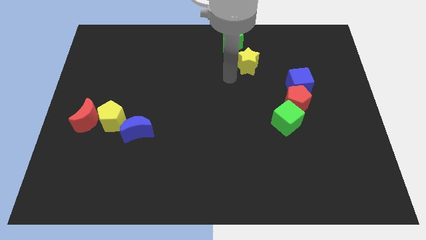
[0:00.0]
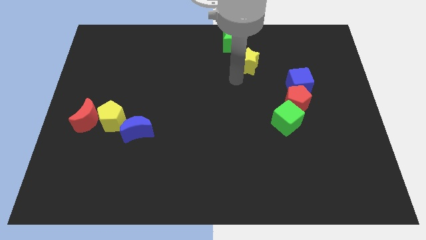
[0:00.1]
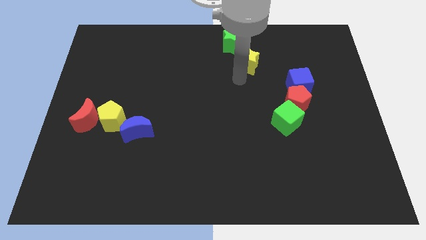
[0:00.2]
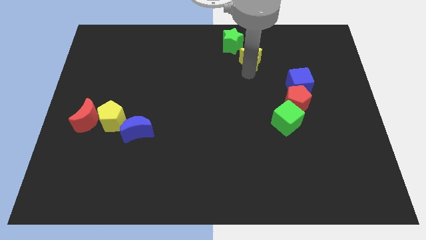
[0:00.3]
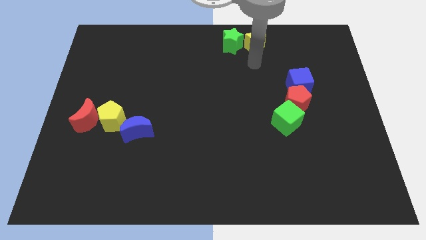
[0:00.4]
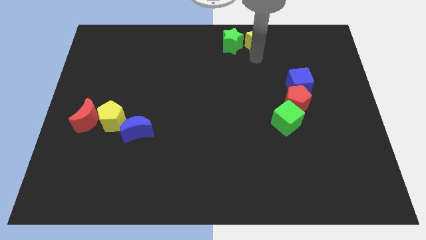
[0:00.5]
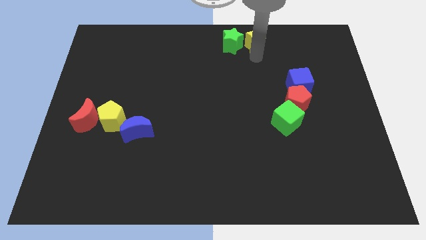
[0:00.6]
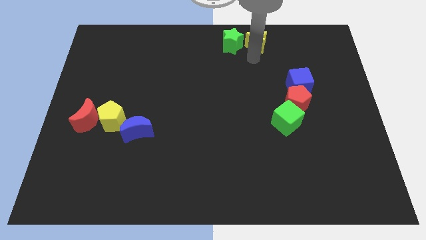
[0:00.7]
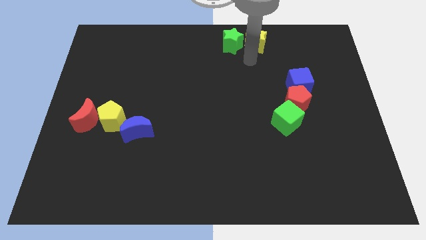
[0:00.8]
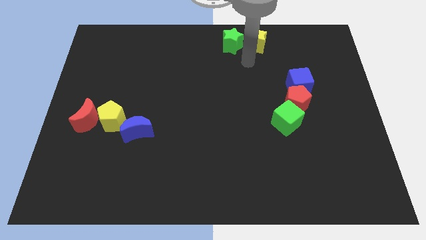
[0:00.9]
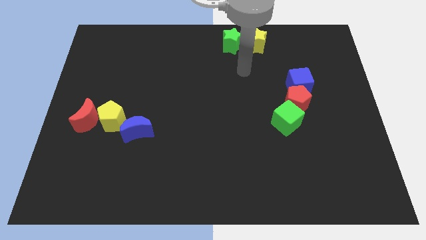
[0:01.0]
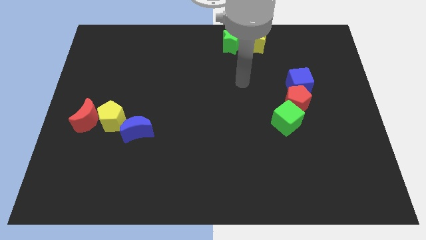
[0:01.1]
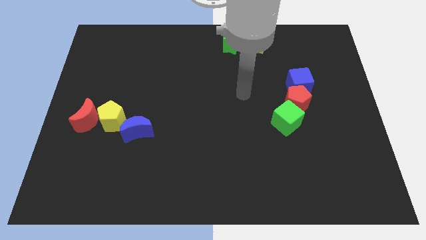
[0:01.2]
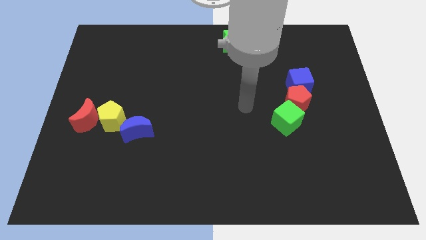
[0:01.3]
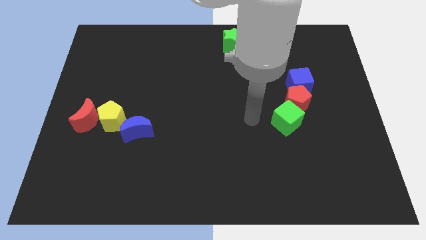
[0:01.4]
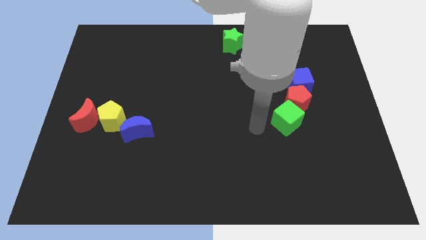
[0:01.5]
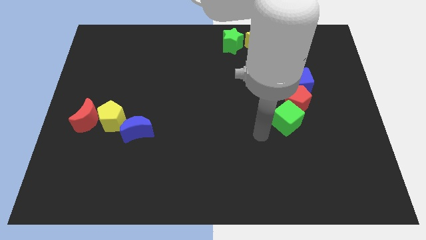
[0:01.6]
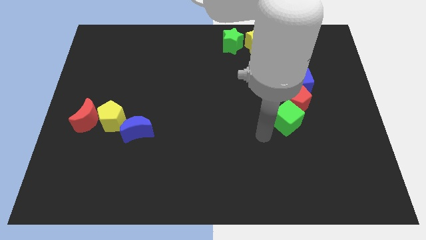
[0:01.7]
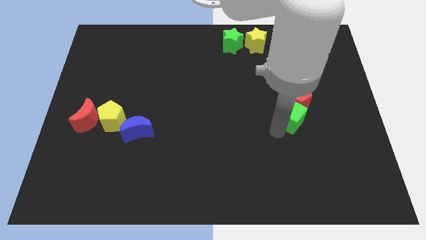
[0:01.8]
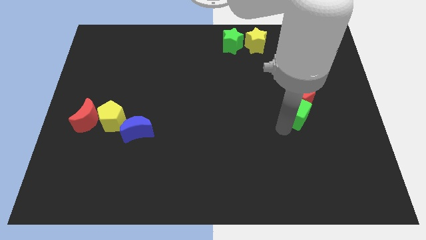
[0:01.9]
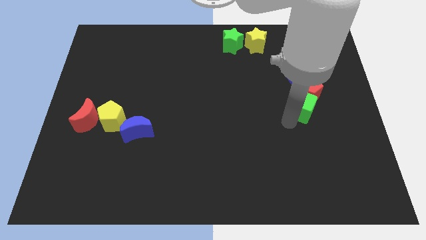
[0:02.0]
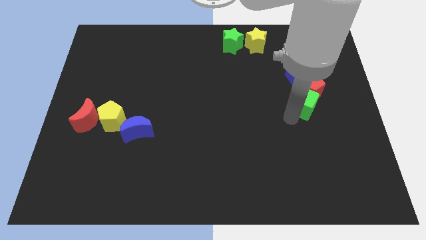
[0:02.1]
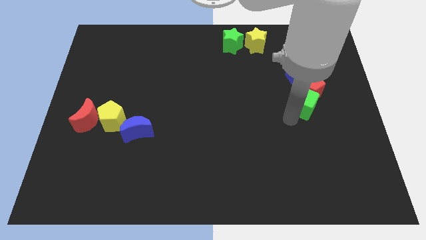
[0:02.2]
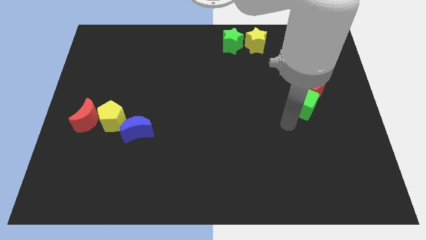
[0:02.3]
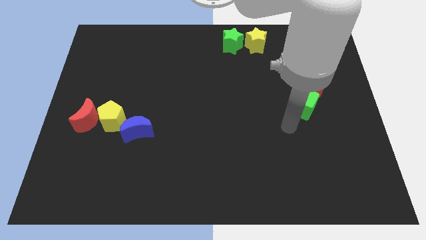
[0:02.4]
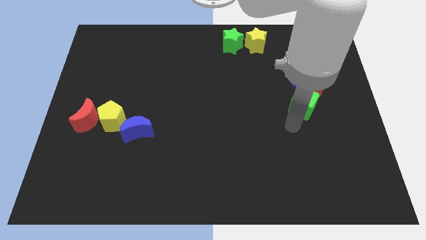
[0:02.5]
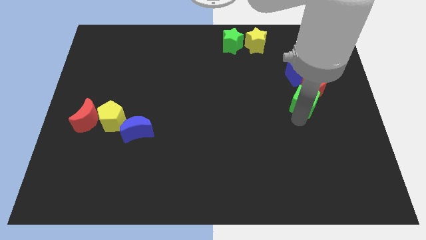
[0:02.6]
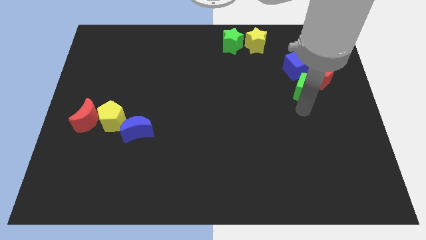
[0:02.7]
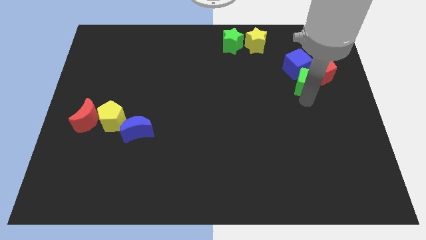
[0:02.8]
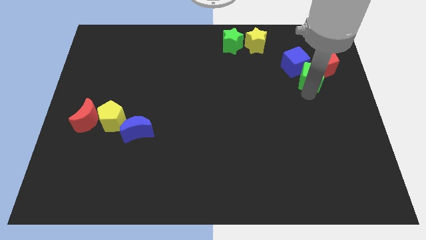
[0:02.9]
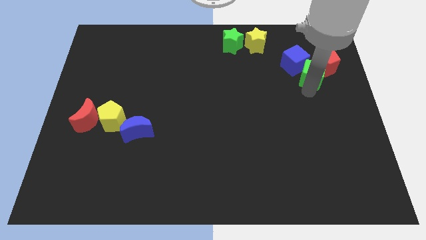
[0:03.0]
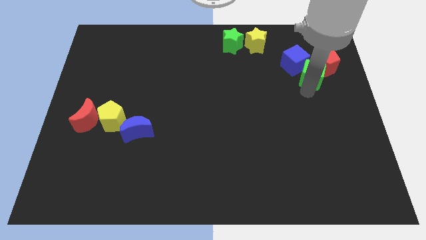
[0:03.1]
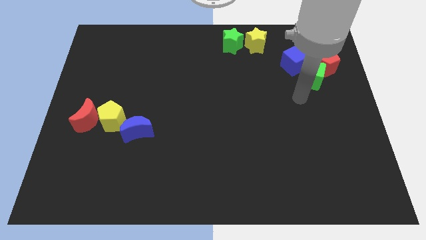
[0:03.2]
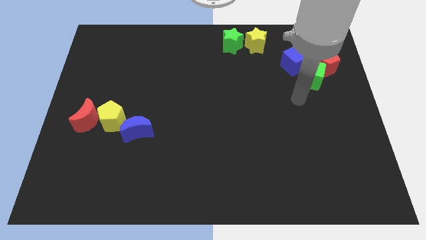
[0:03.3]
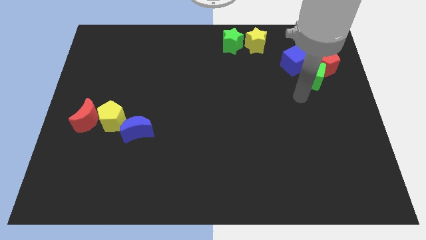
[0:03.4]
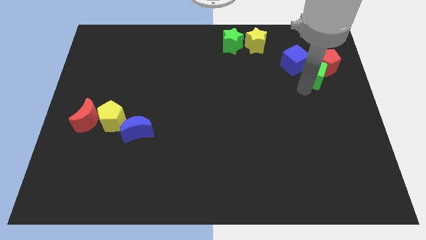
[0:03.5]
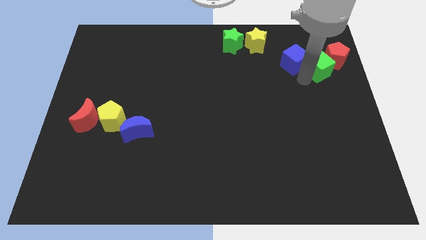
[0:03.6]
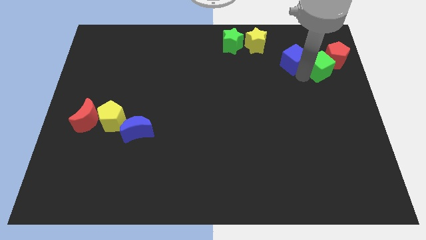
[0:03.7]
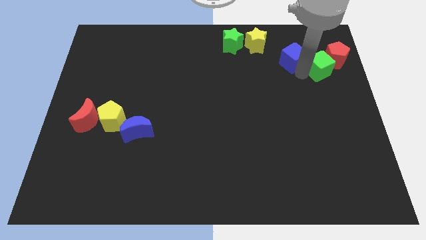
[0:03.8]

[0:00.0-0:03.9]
place the blue cube to the bottom right of the yellow star

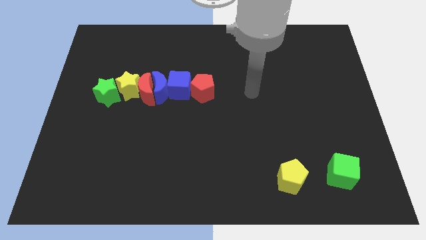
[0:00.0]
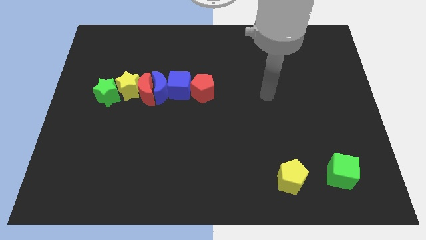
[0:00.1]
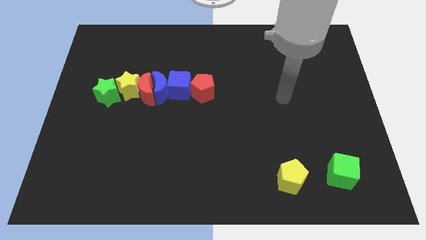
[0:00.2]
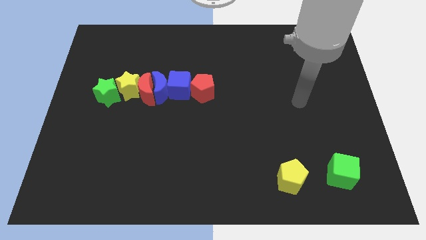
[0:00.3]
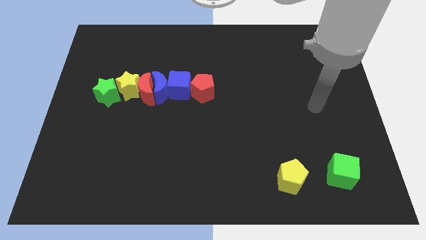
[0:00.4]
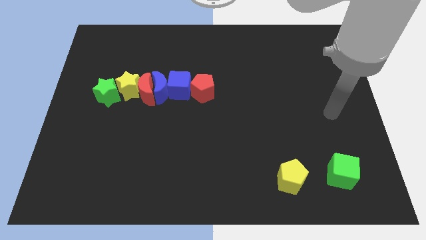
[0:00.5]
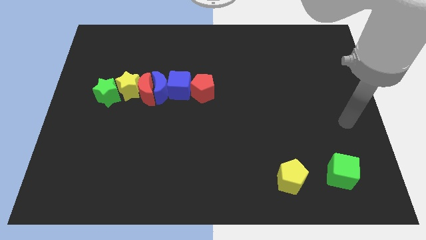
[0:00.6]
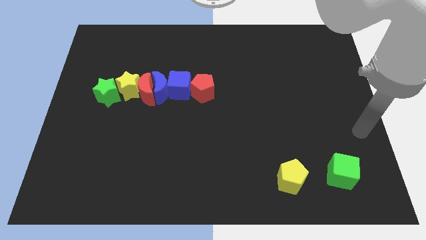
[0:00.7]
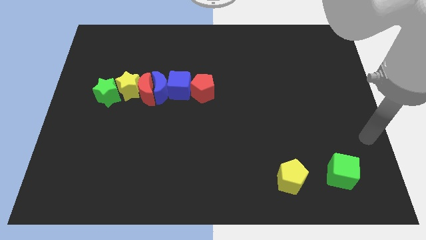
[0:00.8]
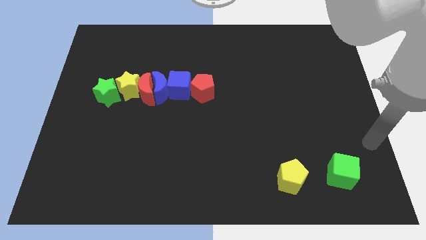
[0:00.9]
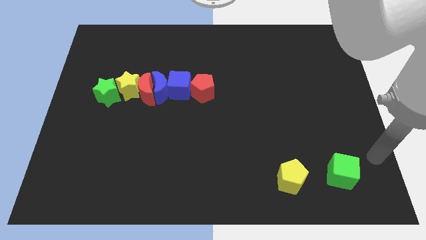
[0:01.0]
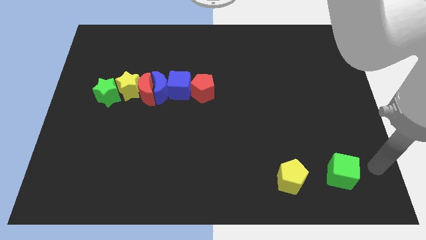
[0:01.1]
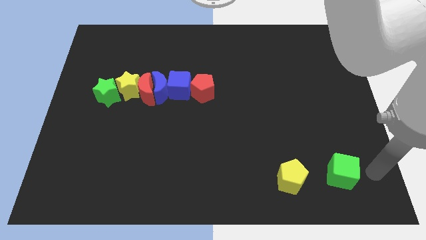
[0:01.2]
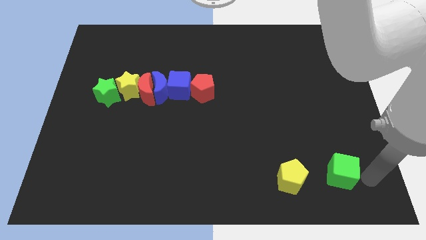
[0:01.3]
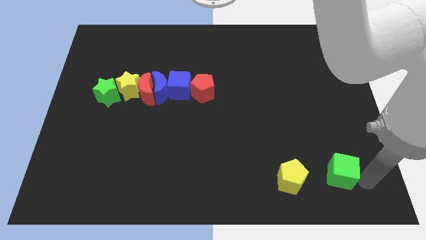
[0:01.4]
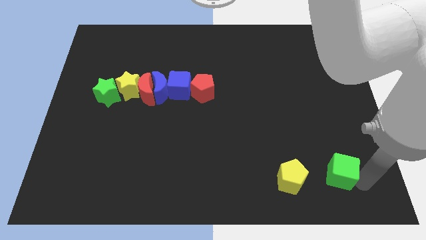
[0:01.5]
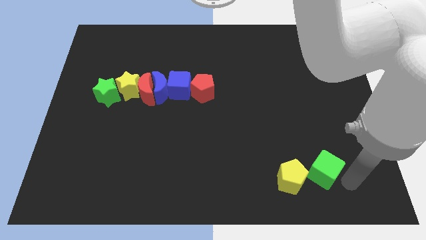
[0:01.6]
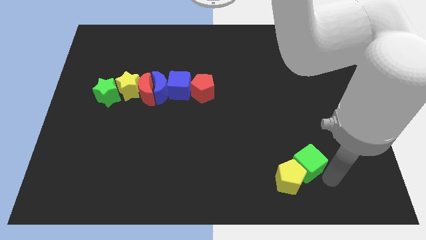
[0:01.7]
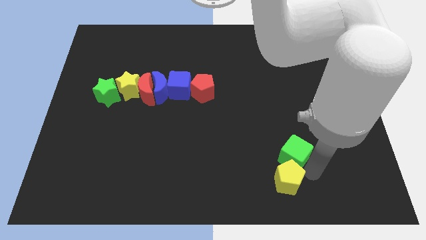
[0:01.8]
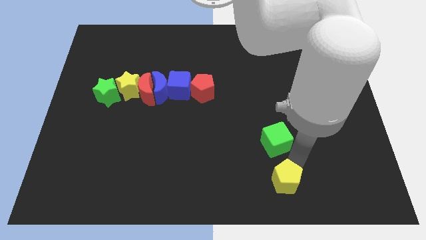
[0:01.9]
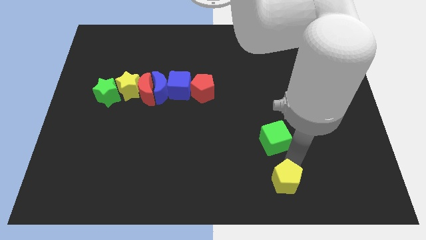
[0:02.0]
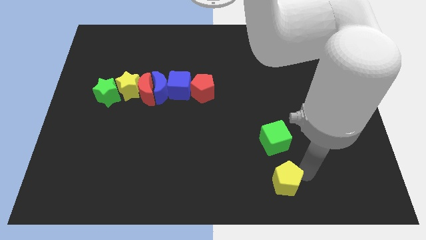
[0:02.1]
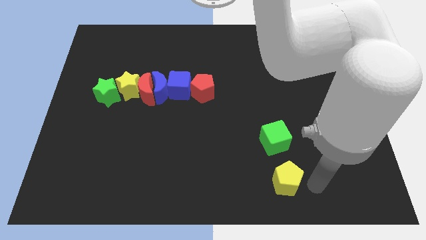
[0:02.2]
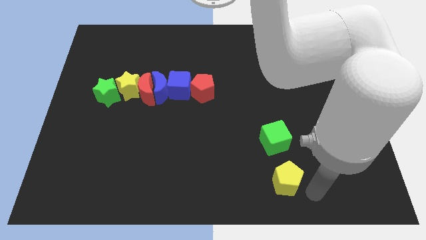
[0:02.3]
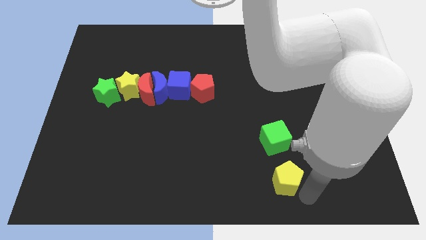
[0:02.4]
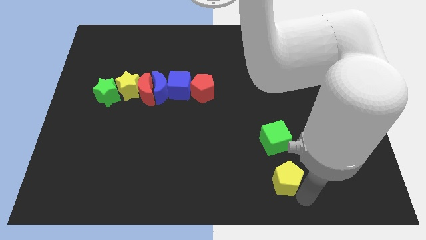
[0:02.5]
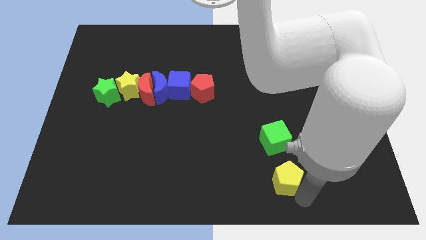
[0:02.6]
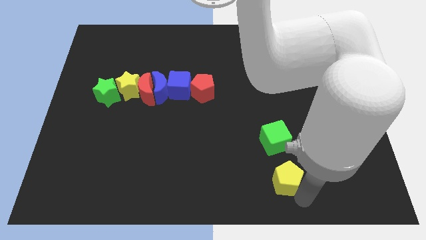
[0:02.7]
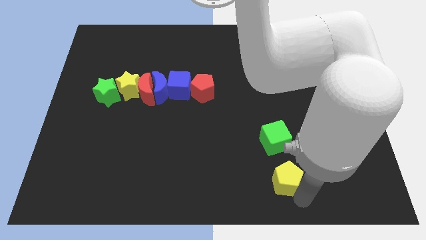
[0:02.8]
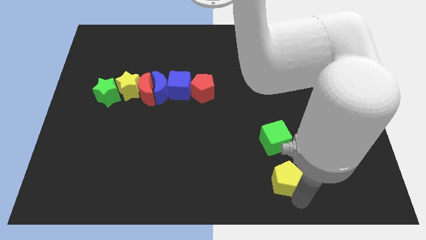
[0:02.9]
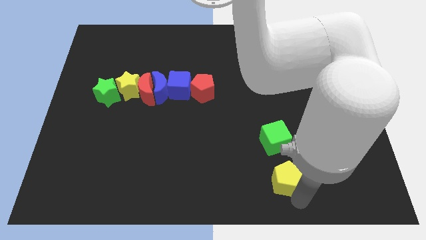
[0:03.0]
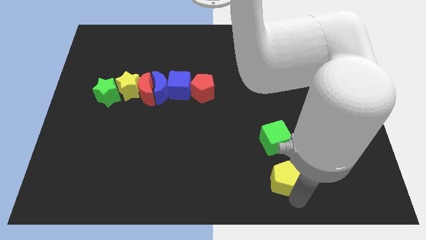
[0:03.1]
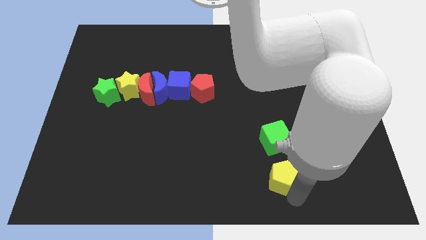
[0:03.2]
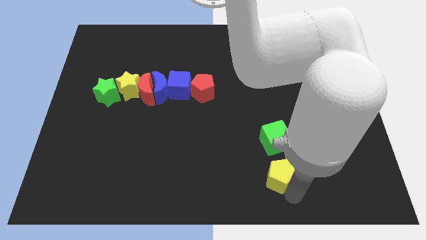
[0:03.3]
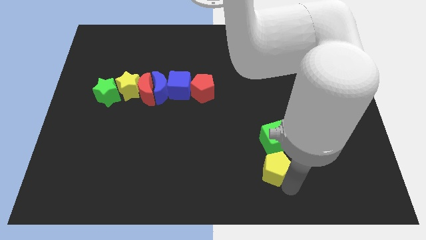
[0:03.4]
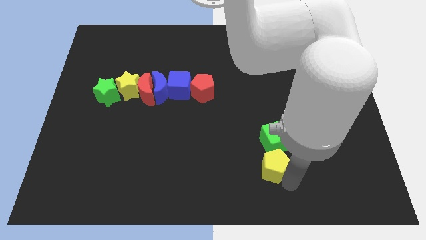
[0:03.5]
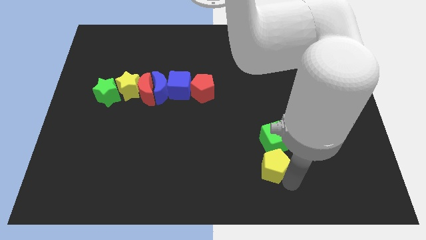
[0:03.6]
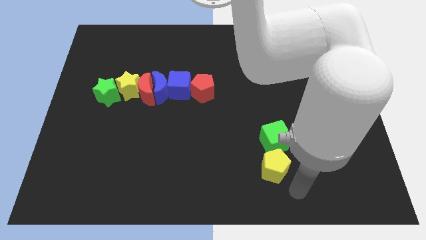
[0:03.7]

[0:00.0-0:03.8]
push yellow pentagon into green cube

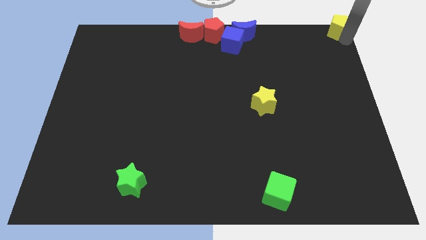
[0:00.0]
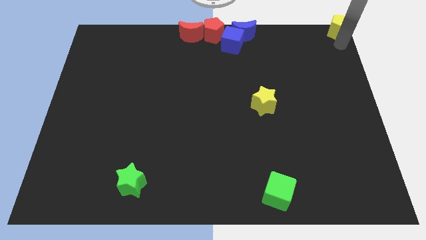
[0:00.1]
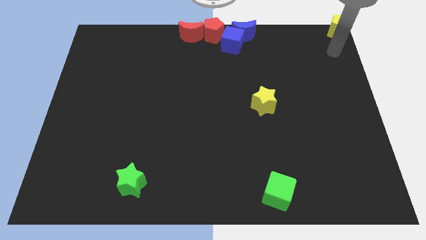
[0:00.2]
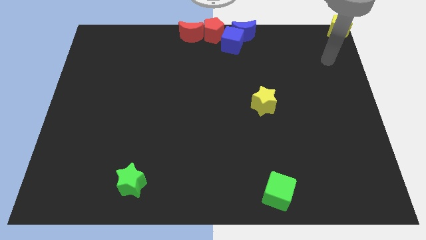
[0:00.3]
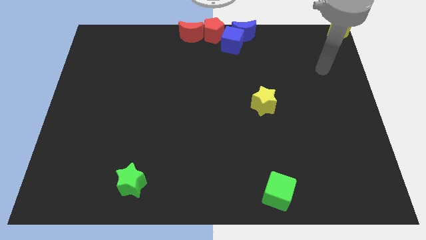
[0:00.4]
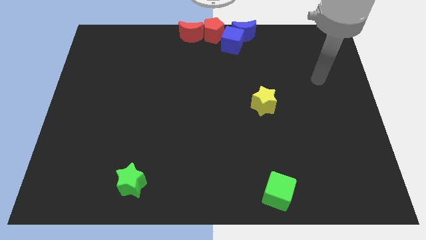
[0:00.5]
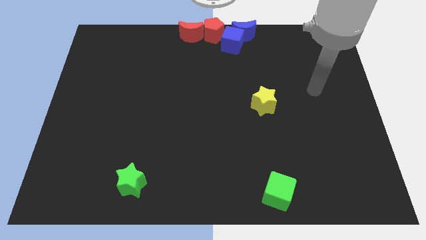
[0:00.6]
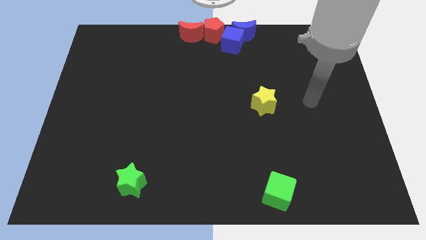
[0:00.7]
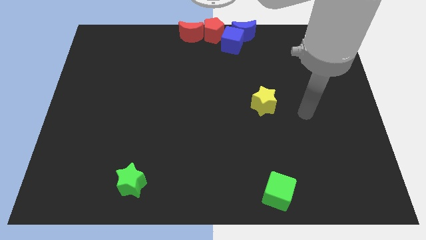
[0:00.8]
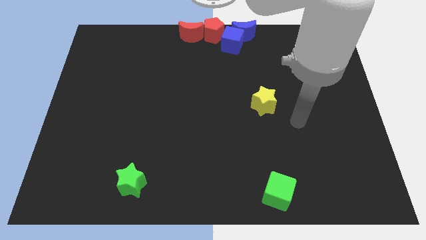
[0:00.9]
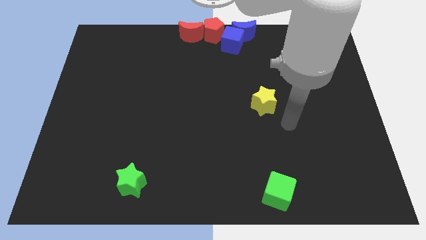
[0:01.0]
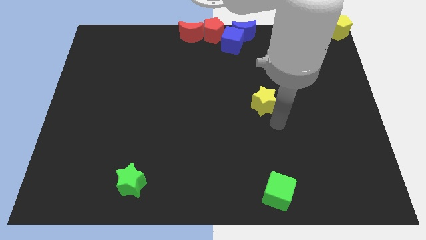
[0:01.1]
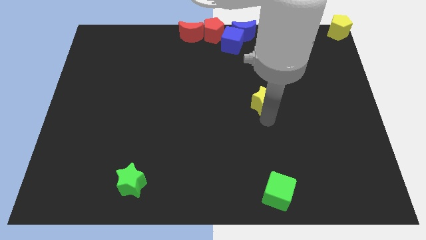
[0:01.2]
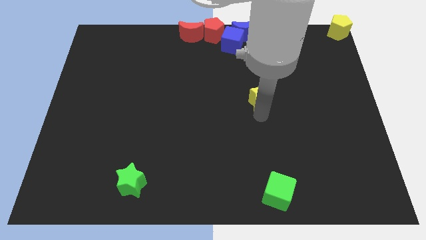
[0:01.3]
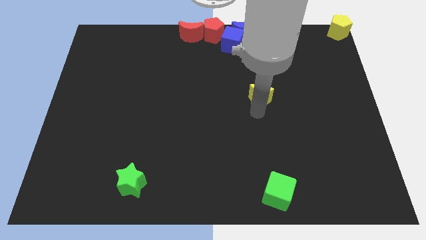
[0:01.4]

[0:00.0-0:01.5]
point your arm below yellow star
